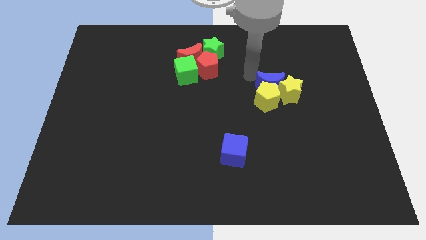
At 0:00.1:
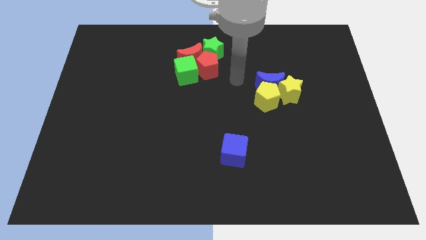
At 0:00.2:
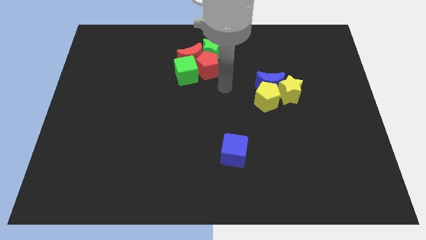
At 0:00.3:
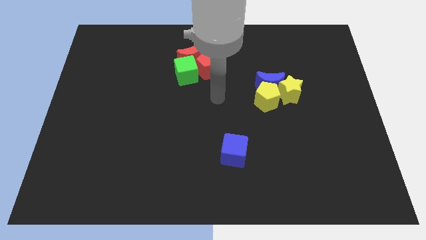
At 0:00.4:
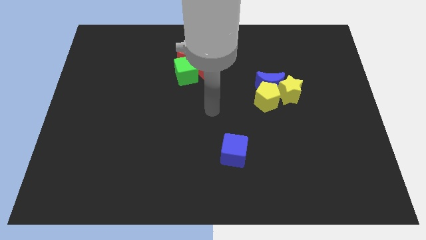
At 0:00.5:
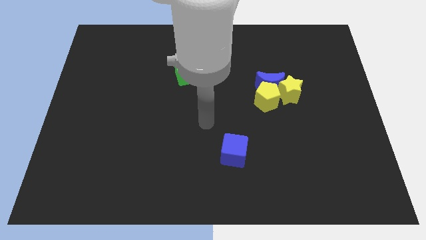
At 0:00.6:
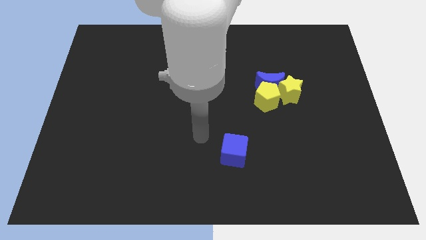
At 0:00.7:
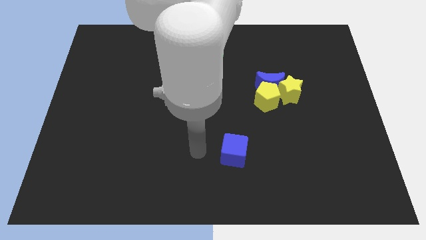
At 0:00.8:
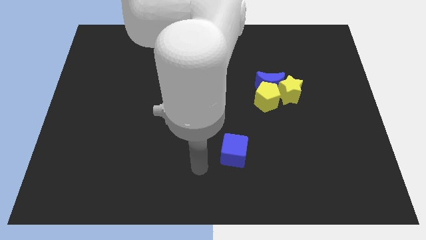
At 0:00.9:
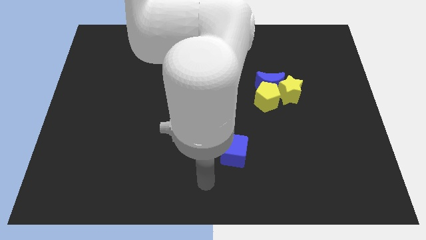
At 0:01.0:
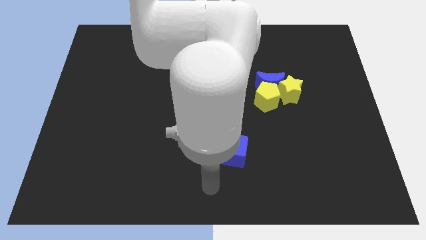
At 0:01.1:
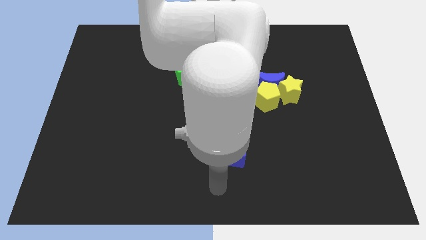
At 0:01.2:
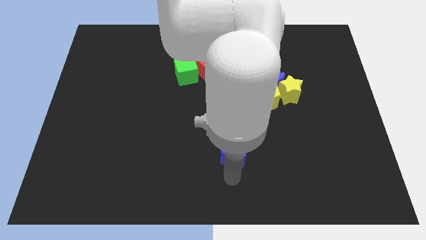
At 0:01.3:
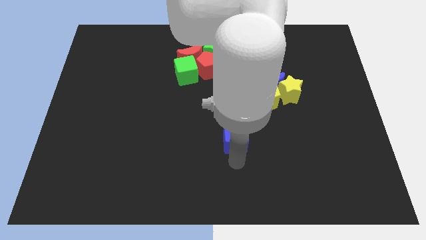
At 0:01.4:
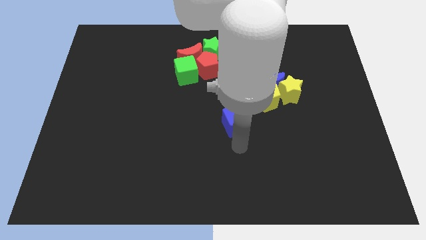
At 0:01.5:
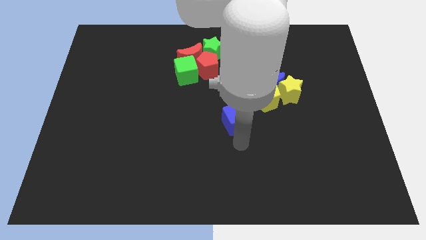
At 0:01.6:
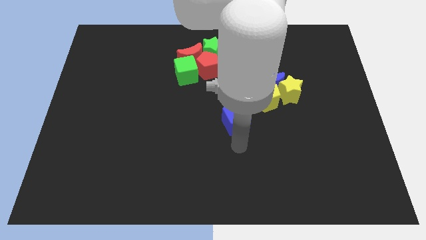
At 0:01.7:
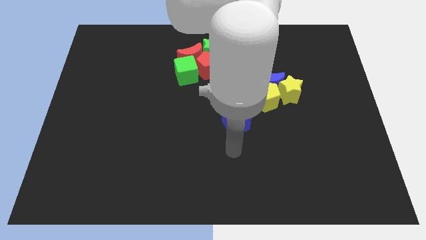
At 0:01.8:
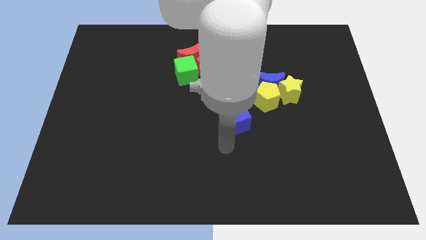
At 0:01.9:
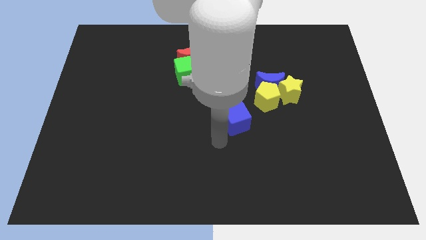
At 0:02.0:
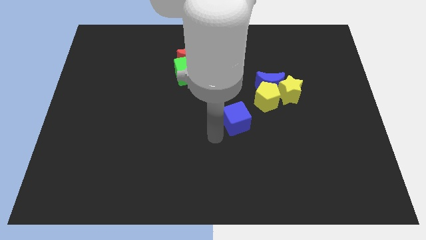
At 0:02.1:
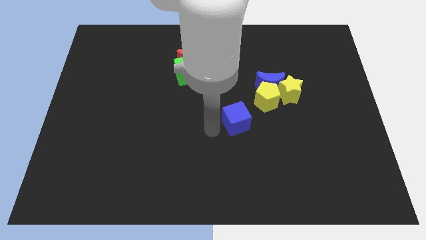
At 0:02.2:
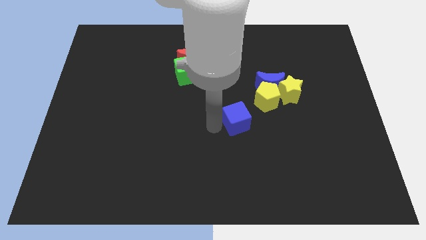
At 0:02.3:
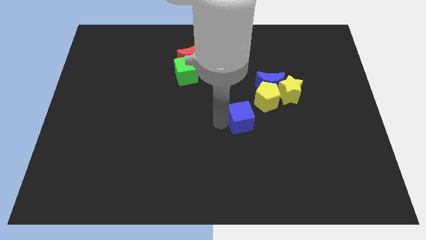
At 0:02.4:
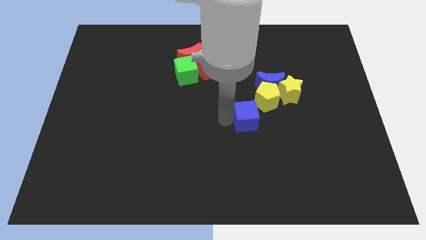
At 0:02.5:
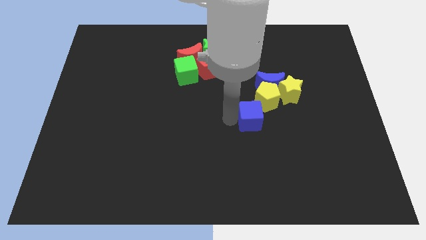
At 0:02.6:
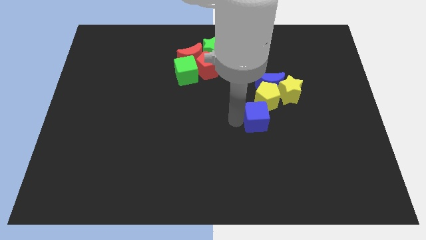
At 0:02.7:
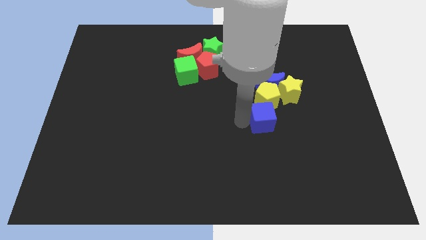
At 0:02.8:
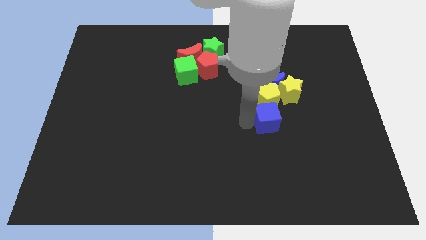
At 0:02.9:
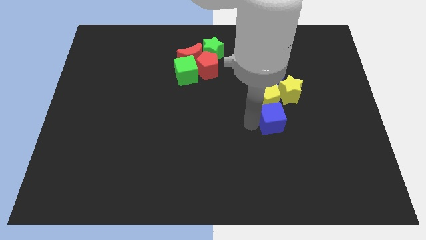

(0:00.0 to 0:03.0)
push the blue cube below the yellow pentagon

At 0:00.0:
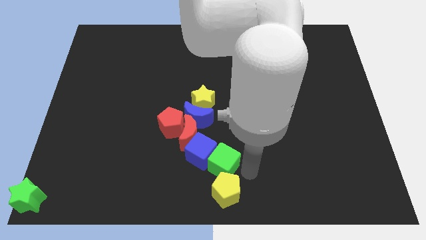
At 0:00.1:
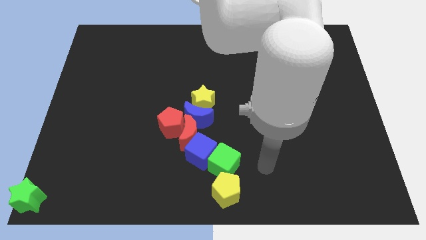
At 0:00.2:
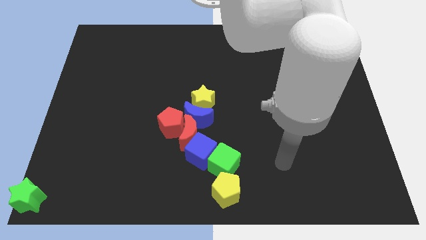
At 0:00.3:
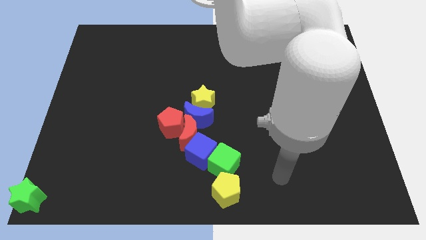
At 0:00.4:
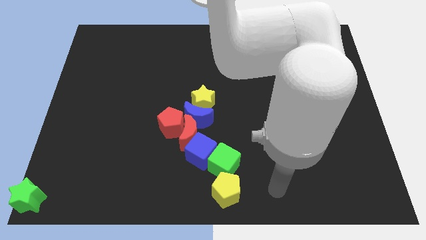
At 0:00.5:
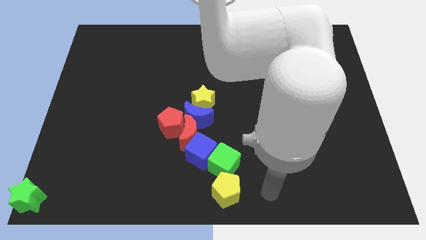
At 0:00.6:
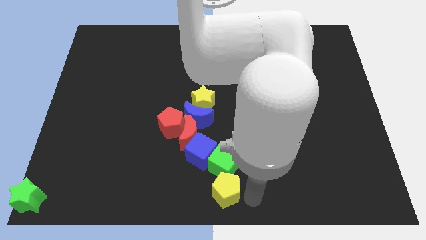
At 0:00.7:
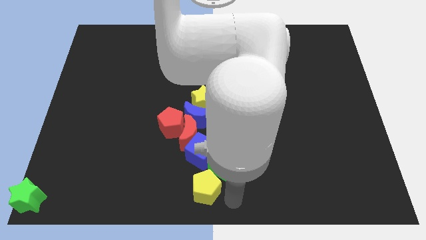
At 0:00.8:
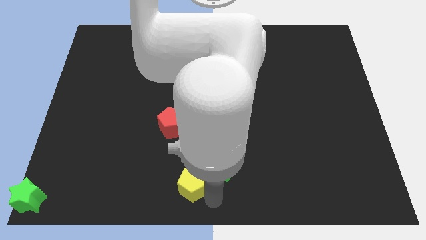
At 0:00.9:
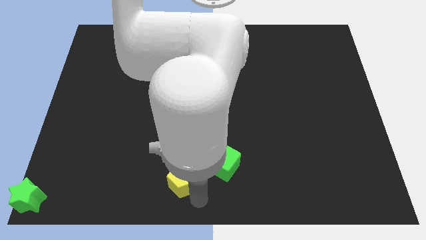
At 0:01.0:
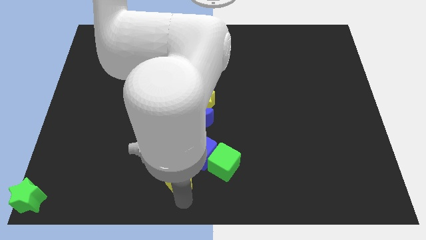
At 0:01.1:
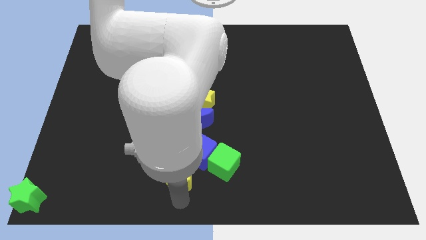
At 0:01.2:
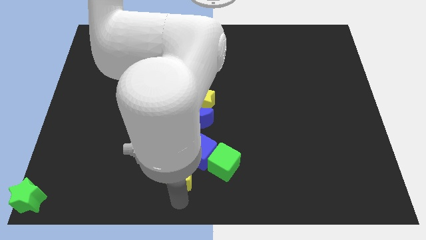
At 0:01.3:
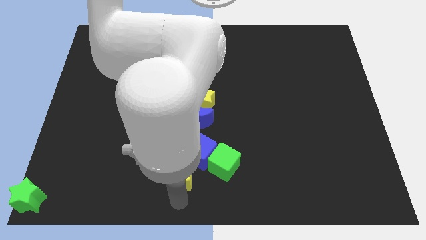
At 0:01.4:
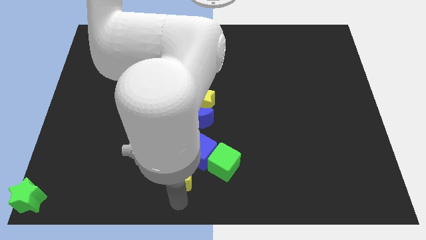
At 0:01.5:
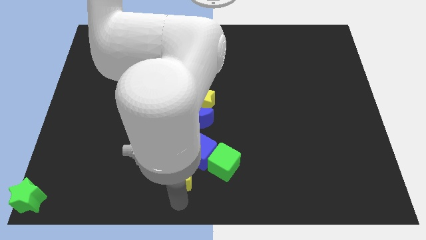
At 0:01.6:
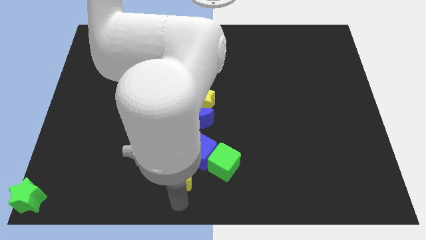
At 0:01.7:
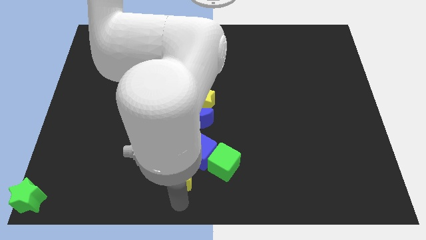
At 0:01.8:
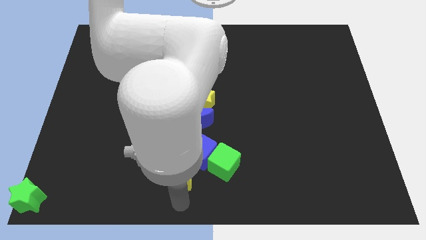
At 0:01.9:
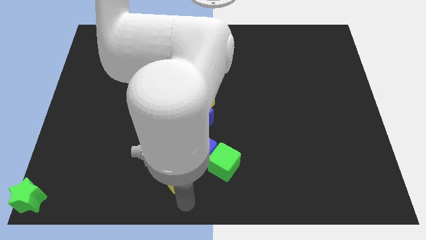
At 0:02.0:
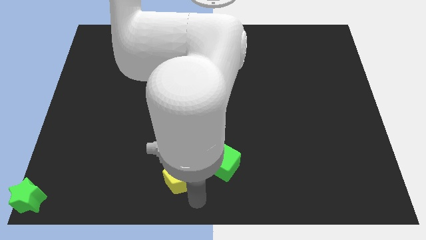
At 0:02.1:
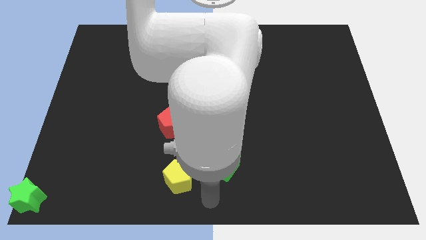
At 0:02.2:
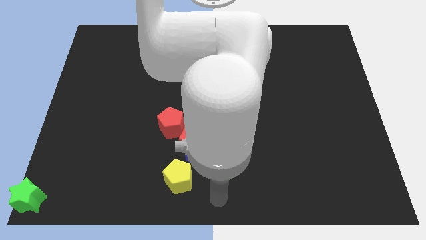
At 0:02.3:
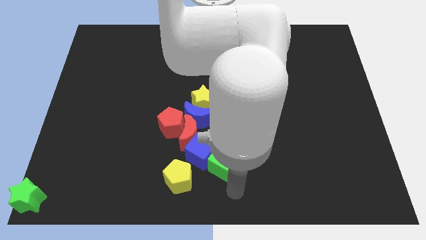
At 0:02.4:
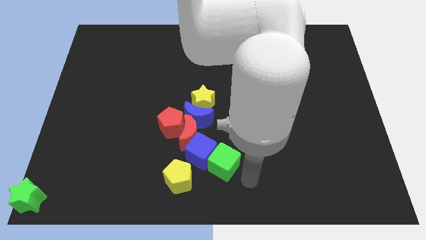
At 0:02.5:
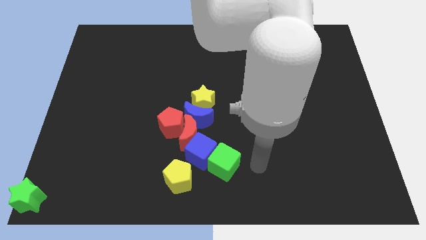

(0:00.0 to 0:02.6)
separate the yellow pentagon from the green cube

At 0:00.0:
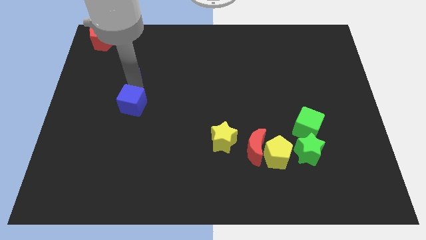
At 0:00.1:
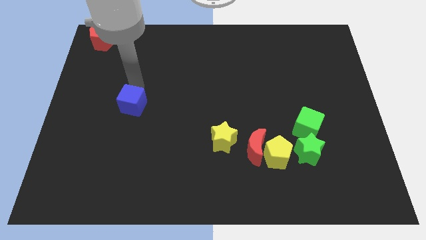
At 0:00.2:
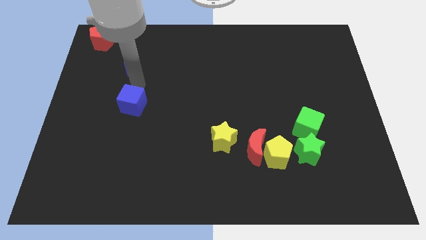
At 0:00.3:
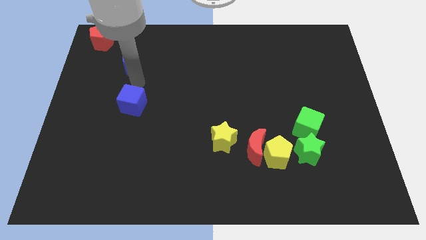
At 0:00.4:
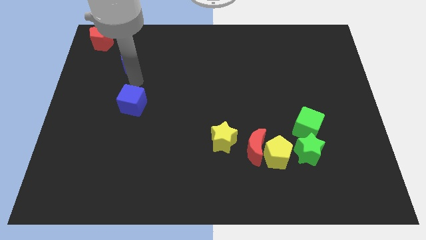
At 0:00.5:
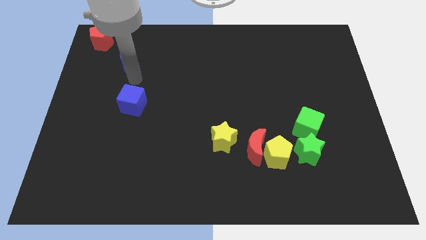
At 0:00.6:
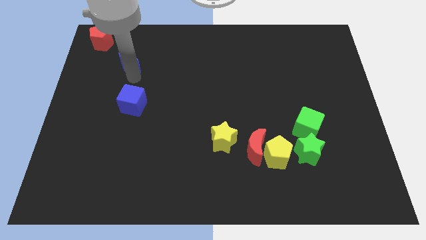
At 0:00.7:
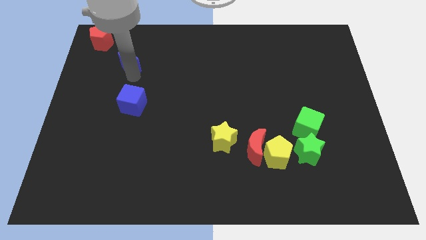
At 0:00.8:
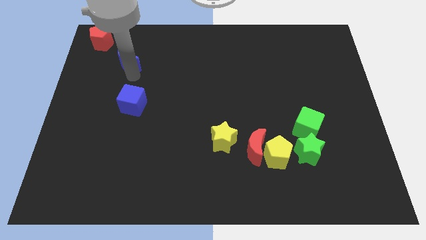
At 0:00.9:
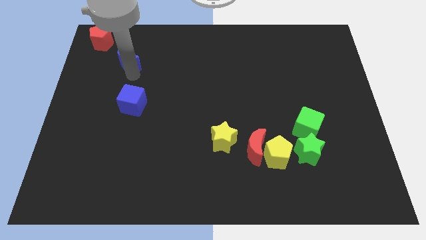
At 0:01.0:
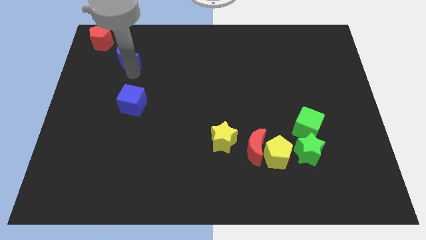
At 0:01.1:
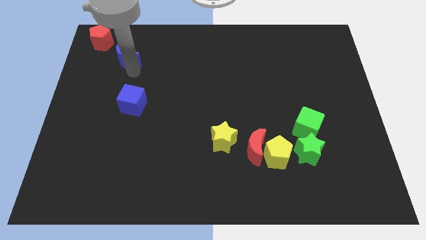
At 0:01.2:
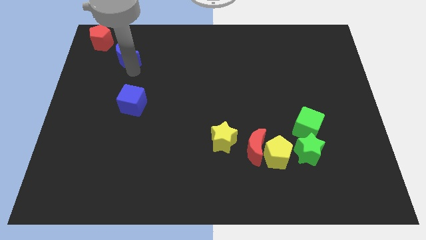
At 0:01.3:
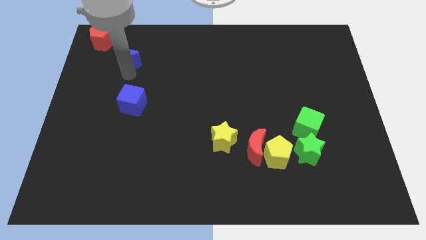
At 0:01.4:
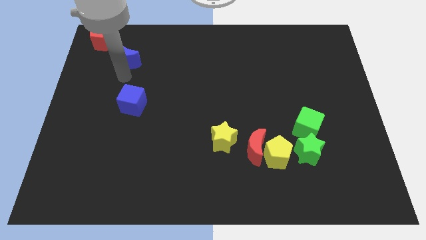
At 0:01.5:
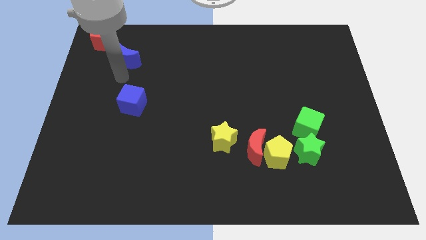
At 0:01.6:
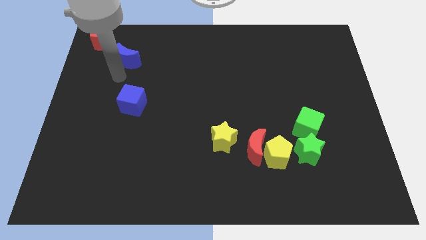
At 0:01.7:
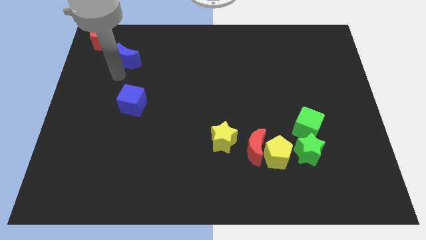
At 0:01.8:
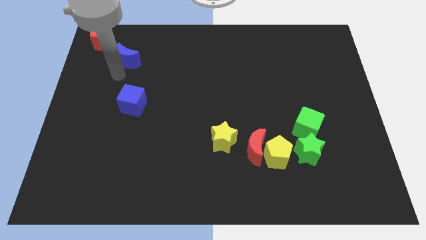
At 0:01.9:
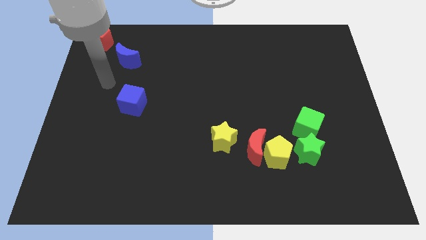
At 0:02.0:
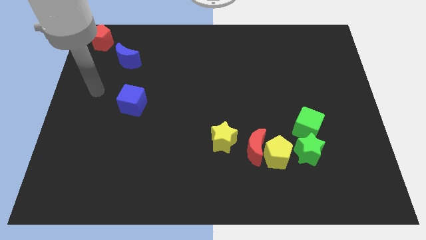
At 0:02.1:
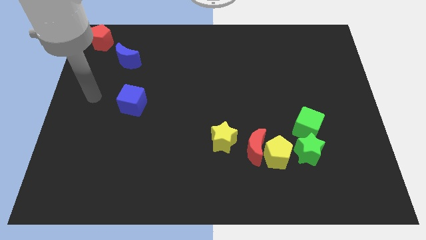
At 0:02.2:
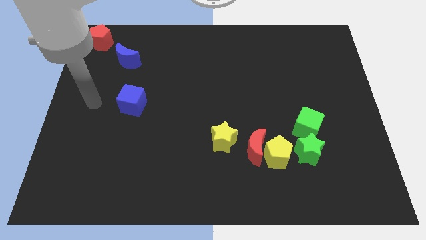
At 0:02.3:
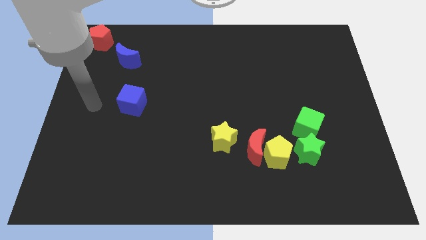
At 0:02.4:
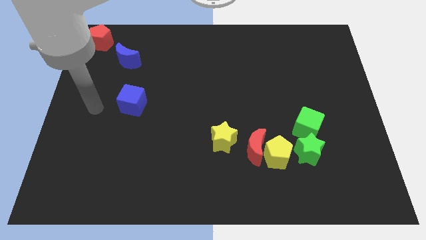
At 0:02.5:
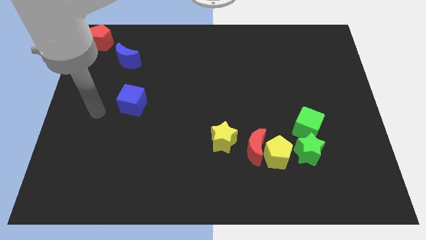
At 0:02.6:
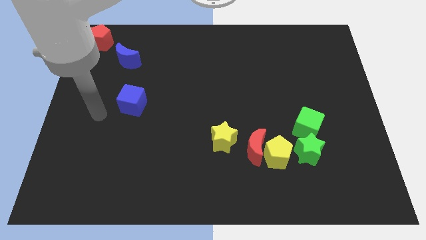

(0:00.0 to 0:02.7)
slightly push the blue crescent towards the red pentagon

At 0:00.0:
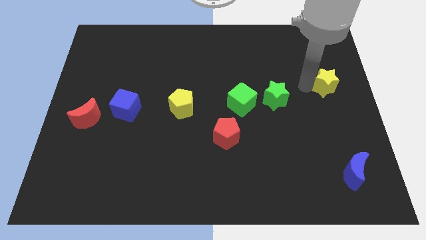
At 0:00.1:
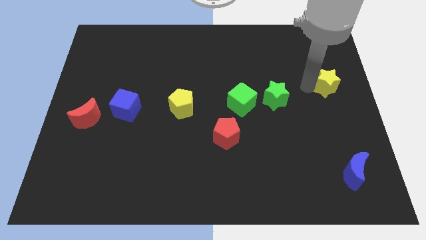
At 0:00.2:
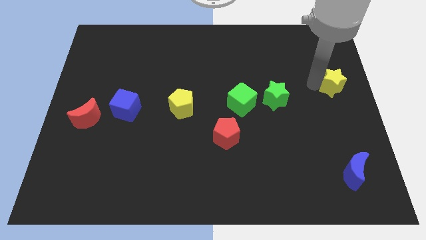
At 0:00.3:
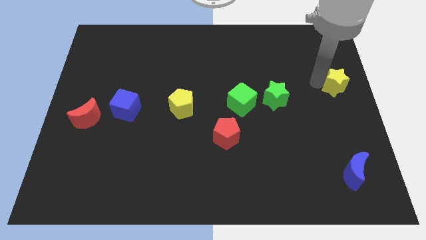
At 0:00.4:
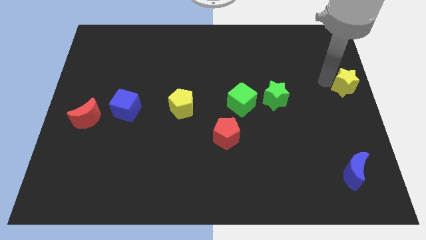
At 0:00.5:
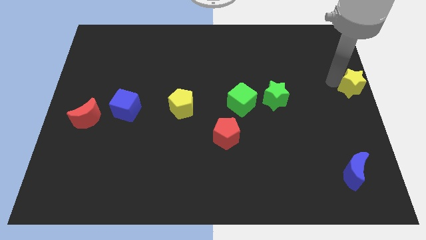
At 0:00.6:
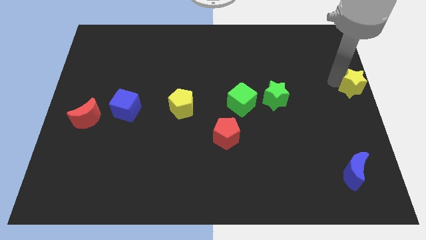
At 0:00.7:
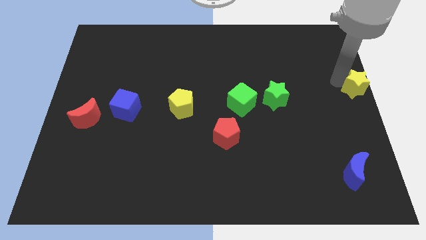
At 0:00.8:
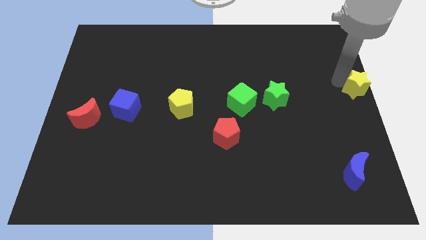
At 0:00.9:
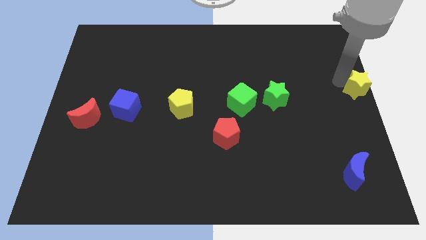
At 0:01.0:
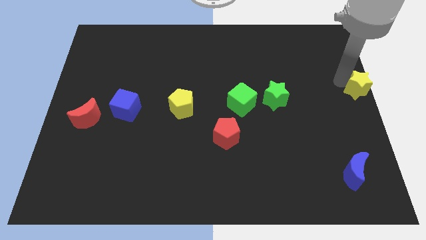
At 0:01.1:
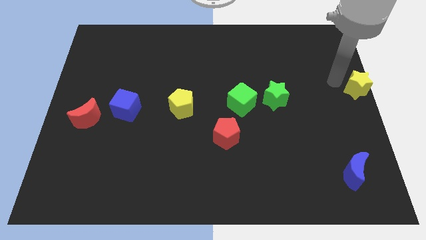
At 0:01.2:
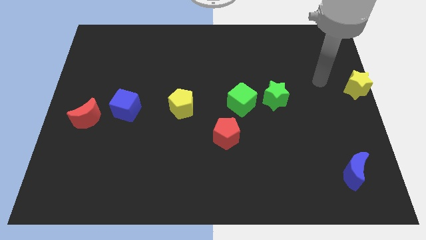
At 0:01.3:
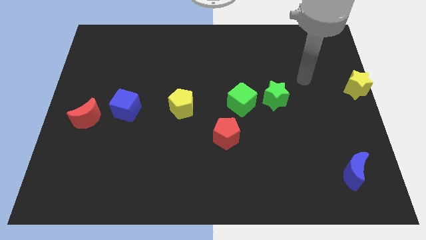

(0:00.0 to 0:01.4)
push the yellow star to the right center of the board
